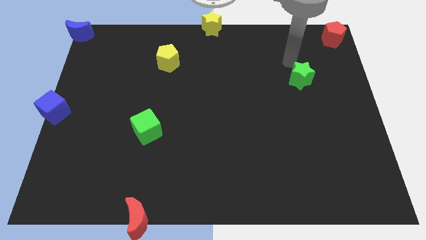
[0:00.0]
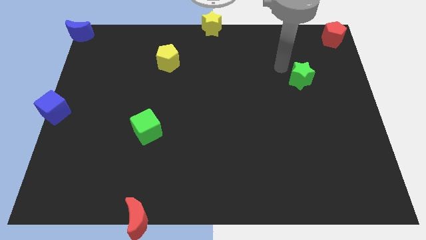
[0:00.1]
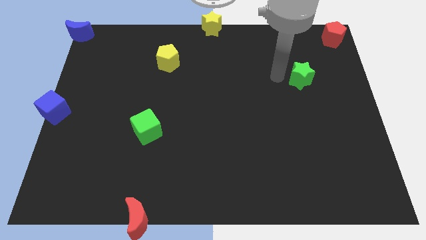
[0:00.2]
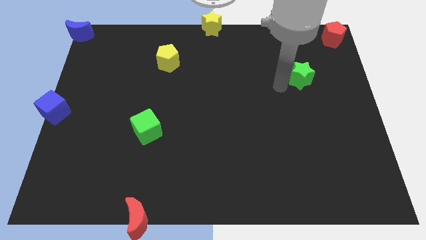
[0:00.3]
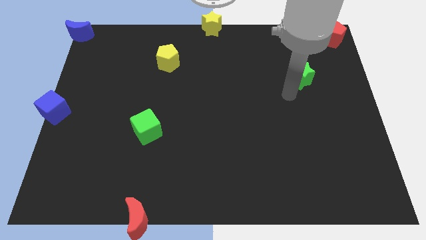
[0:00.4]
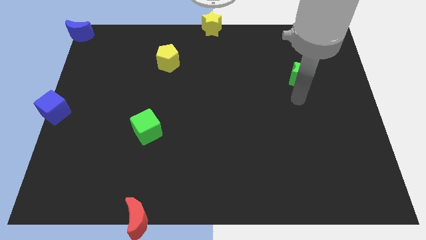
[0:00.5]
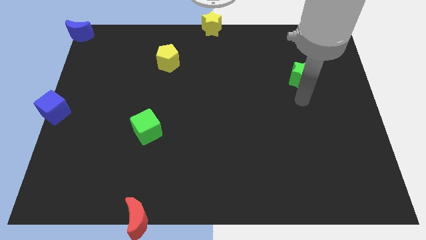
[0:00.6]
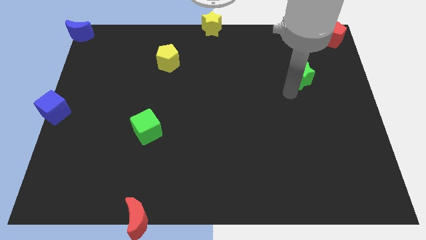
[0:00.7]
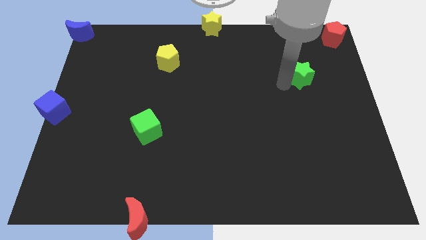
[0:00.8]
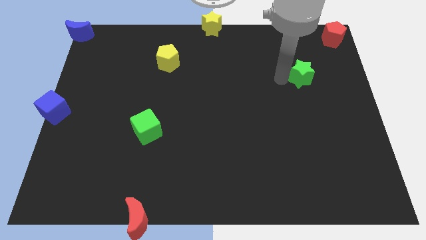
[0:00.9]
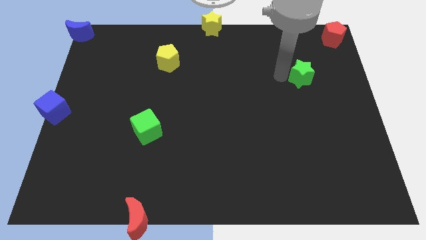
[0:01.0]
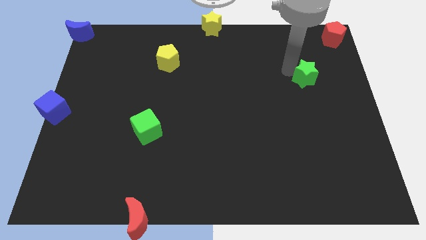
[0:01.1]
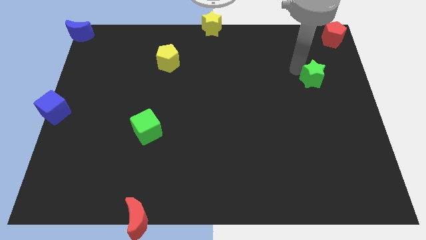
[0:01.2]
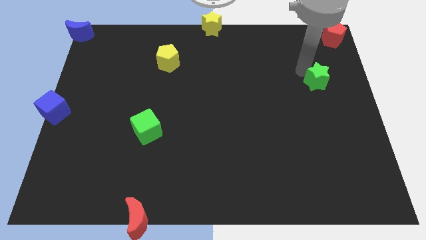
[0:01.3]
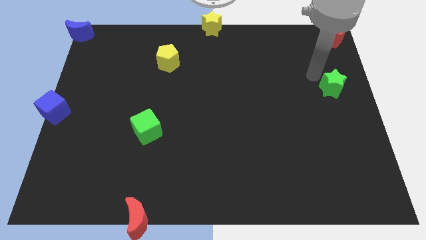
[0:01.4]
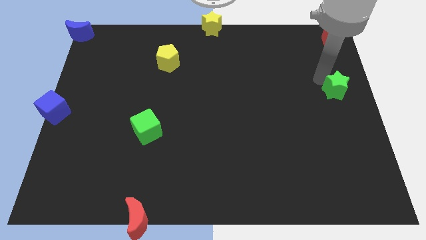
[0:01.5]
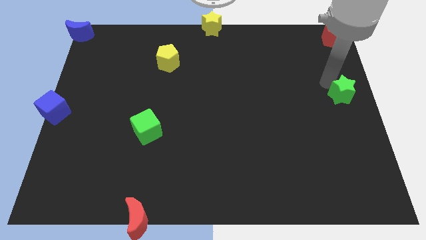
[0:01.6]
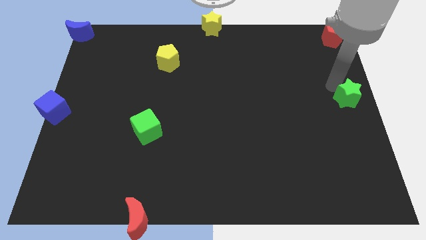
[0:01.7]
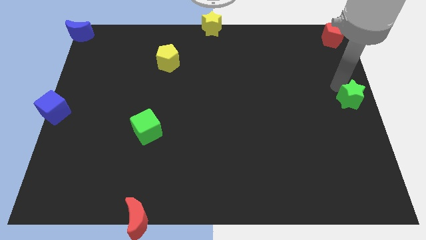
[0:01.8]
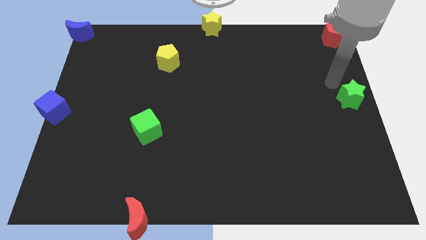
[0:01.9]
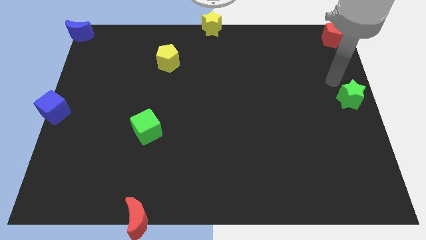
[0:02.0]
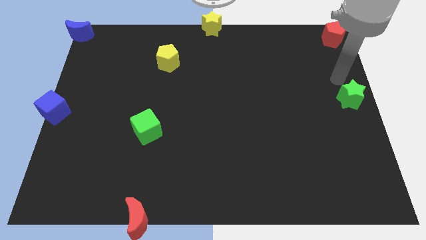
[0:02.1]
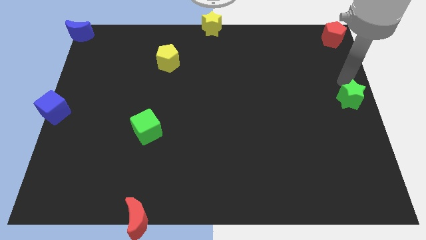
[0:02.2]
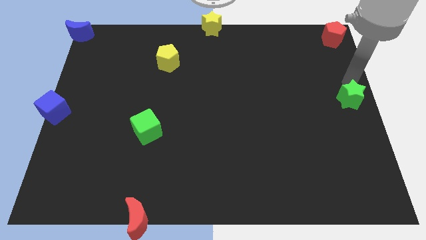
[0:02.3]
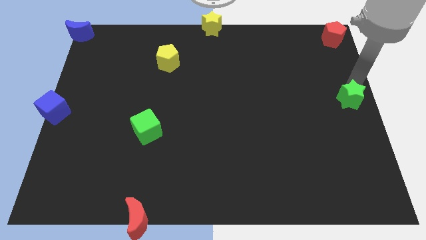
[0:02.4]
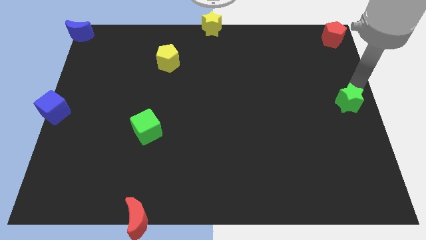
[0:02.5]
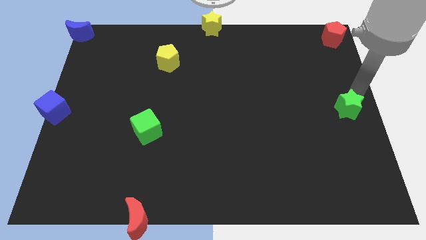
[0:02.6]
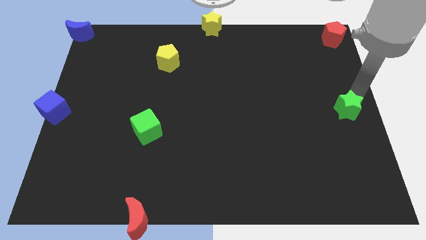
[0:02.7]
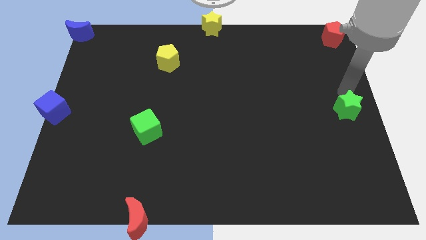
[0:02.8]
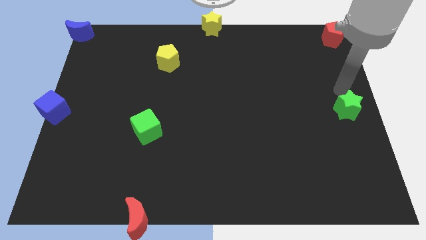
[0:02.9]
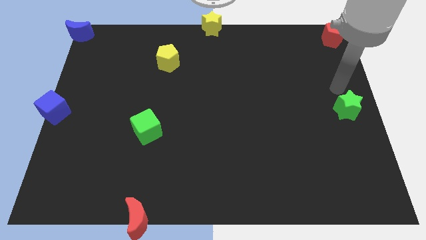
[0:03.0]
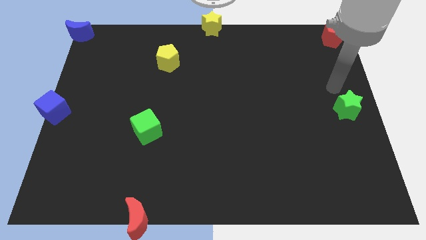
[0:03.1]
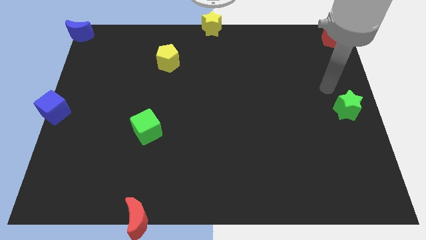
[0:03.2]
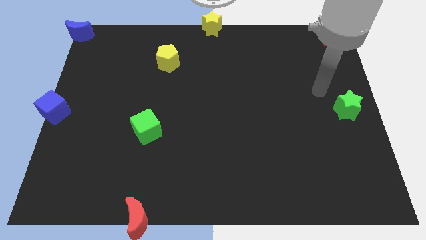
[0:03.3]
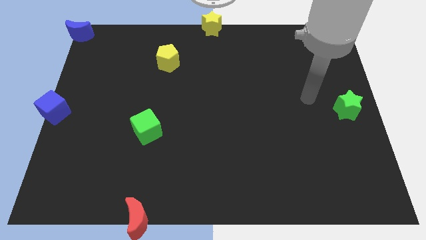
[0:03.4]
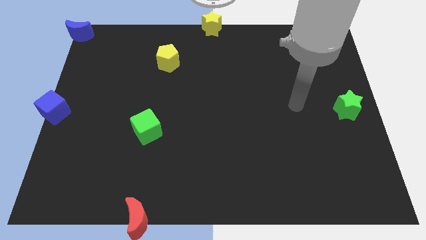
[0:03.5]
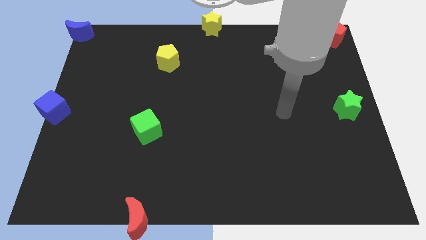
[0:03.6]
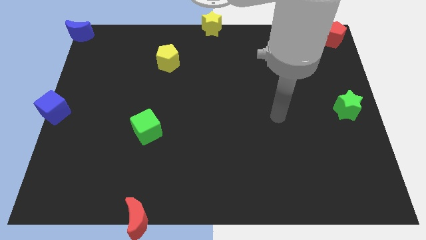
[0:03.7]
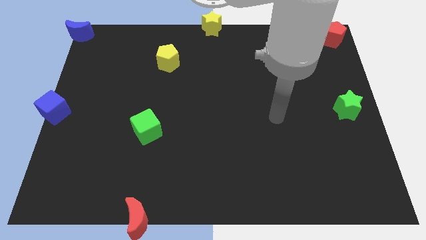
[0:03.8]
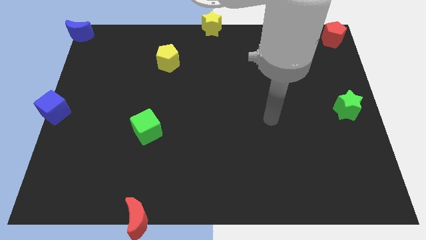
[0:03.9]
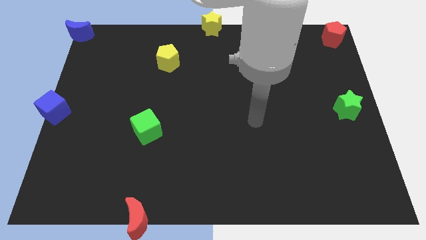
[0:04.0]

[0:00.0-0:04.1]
place the green star at the center right side of the board

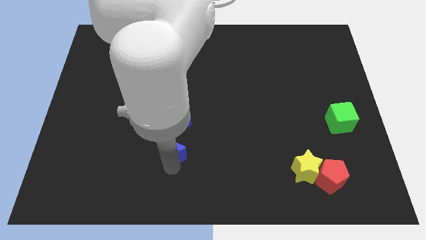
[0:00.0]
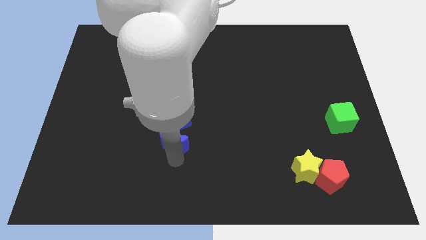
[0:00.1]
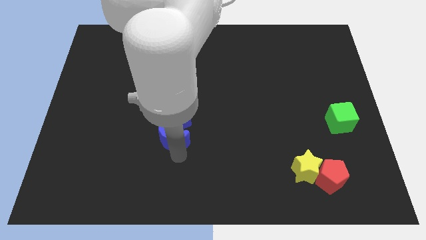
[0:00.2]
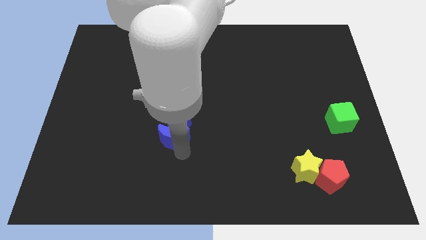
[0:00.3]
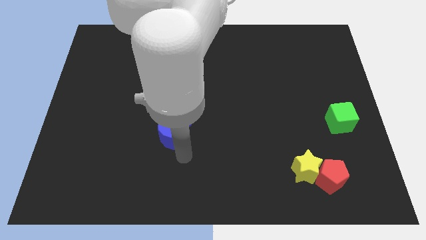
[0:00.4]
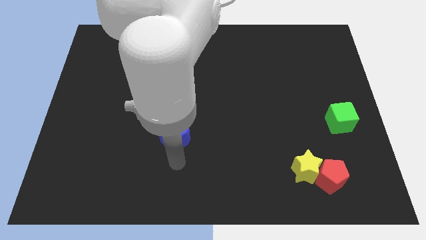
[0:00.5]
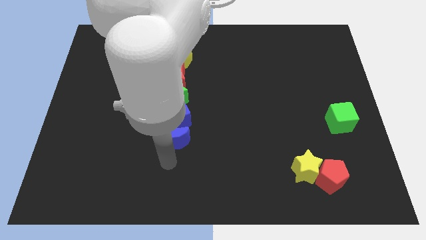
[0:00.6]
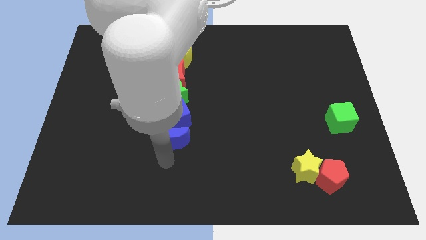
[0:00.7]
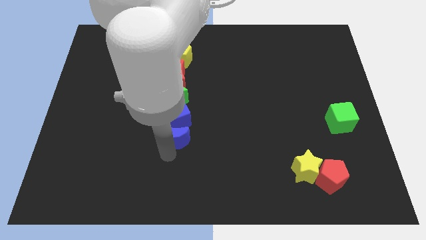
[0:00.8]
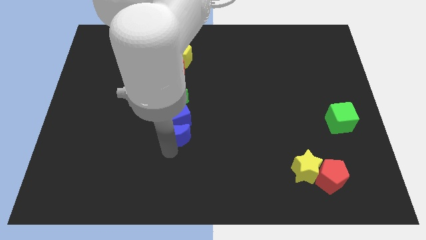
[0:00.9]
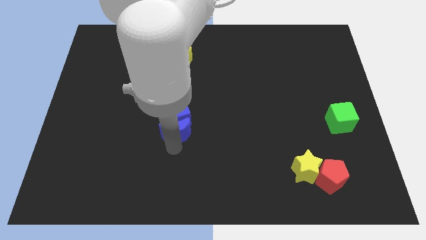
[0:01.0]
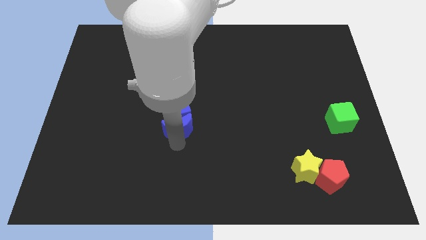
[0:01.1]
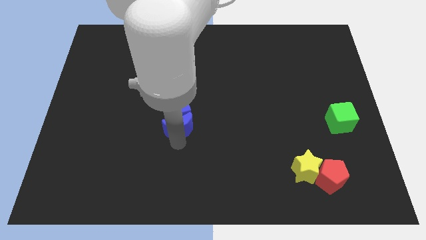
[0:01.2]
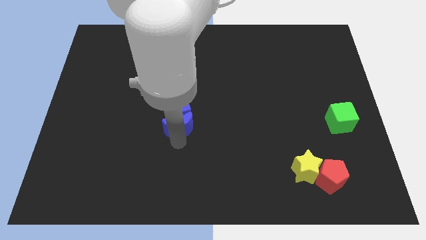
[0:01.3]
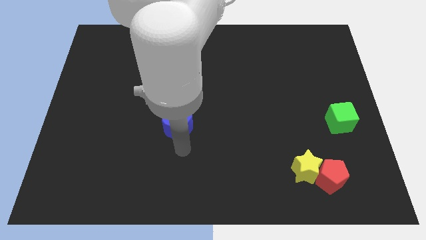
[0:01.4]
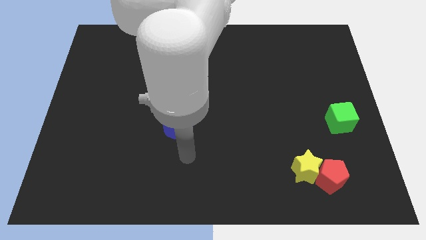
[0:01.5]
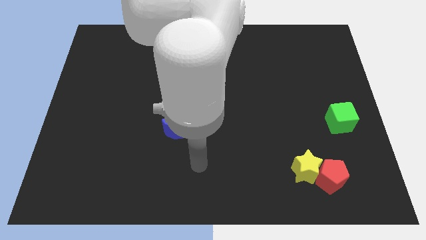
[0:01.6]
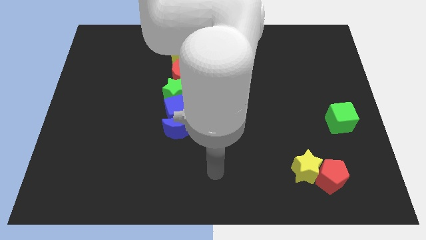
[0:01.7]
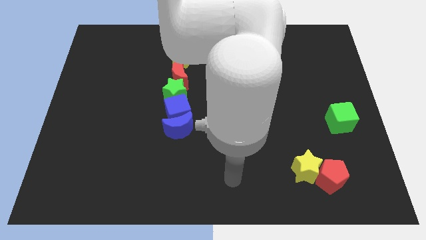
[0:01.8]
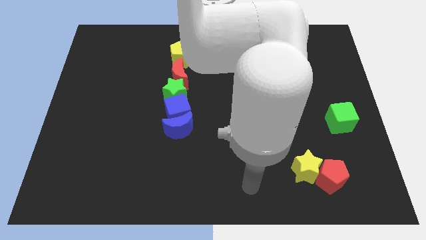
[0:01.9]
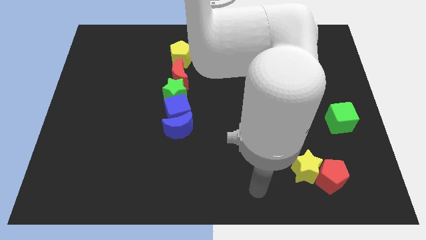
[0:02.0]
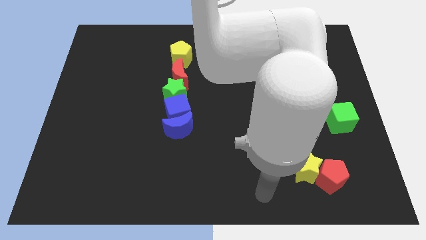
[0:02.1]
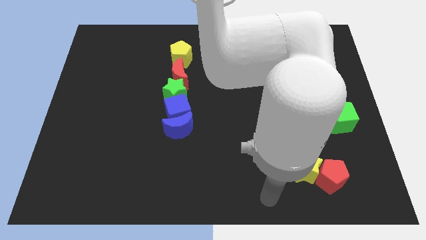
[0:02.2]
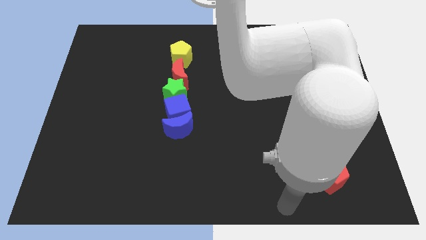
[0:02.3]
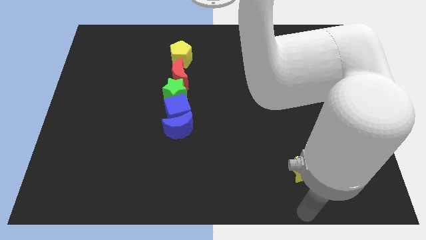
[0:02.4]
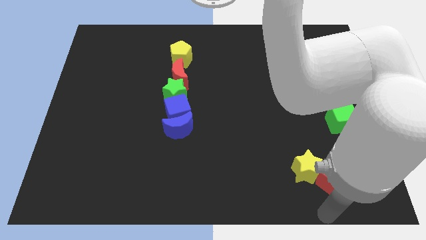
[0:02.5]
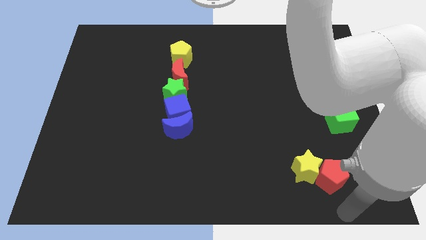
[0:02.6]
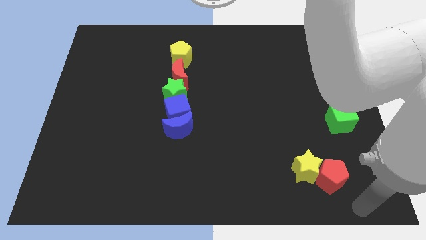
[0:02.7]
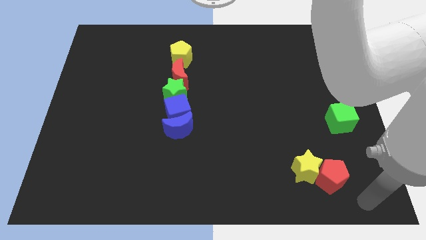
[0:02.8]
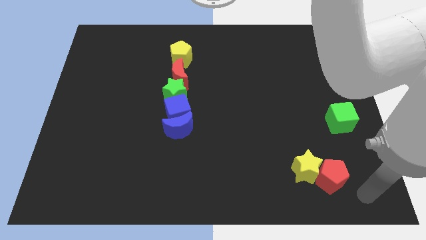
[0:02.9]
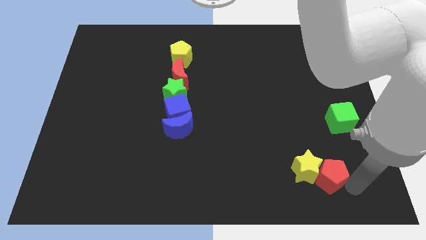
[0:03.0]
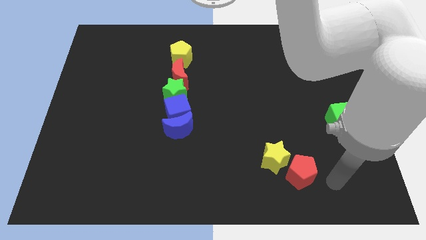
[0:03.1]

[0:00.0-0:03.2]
slide the blue moon into the blue cube

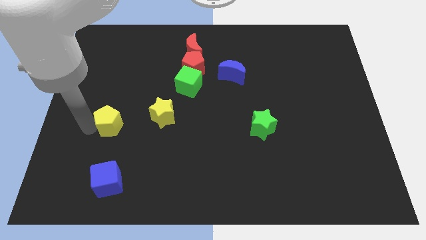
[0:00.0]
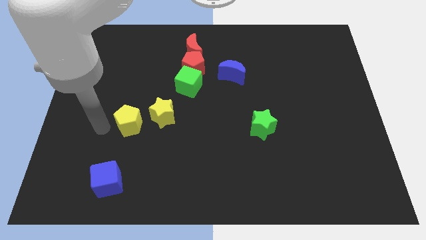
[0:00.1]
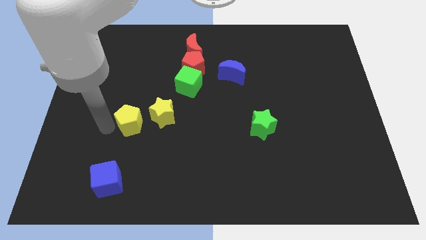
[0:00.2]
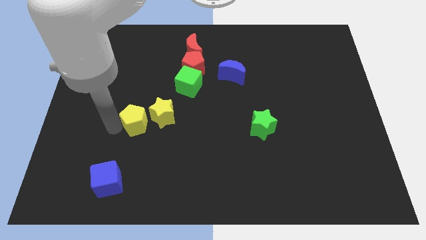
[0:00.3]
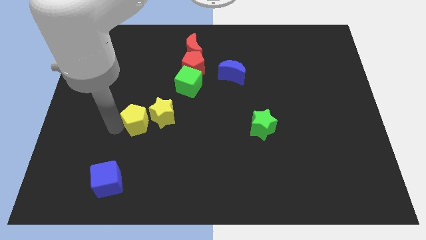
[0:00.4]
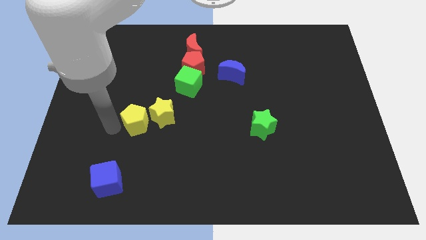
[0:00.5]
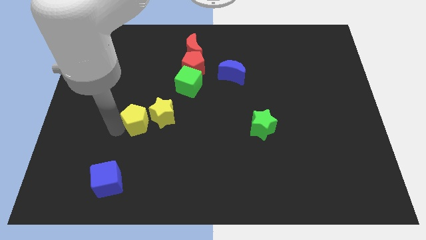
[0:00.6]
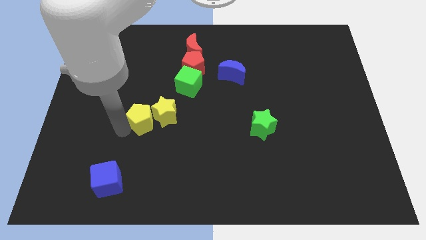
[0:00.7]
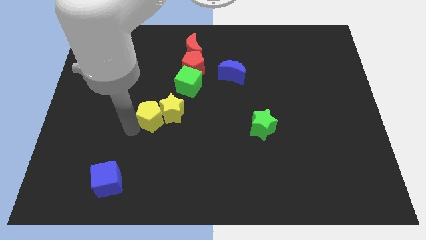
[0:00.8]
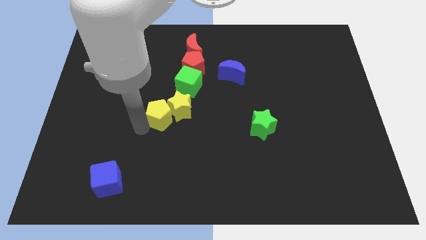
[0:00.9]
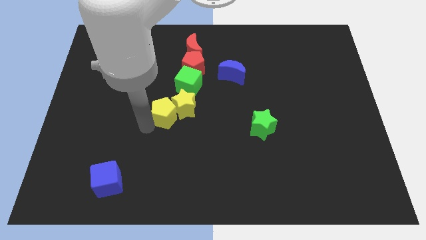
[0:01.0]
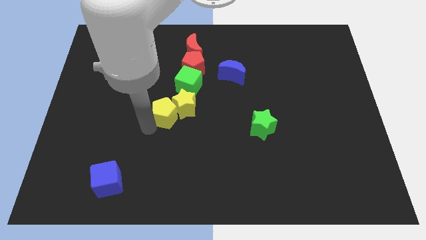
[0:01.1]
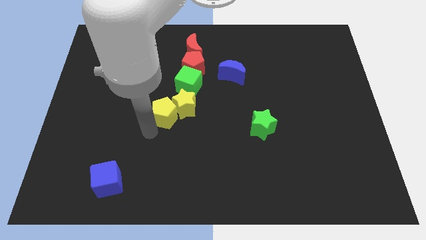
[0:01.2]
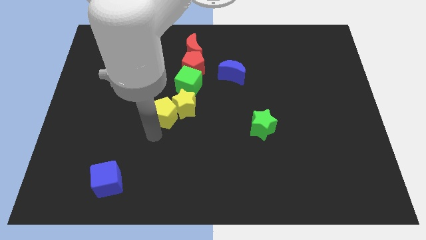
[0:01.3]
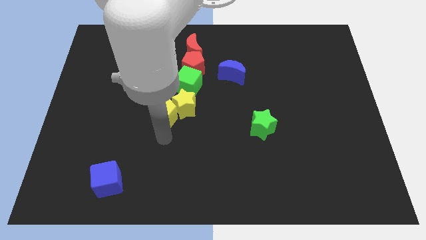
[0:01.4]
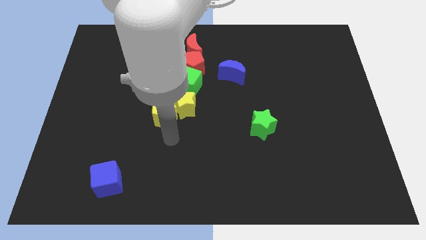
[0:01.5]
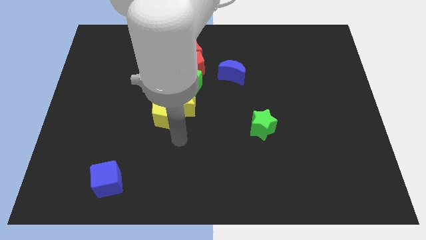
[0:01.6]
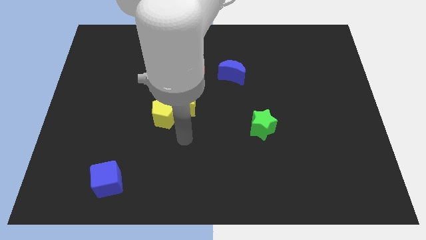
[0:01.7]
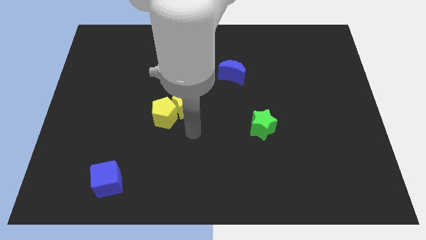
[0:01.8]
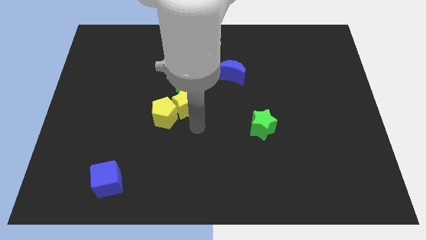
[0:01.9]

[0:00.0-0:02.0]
push the yellow blocks below green cube

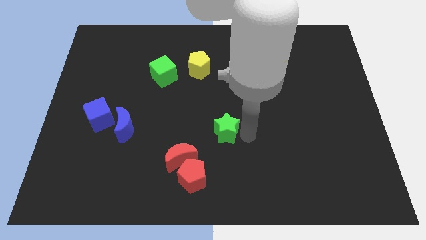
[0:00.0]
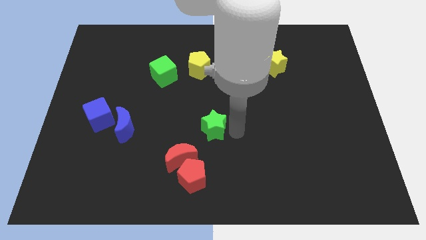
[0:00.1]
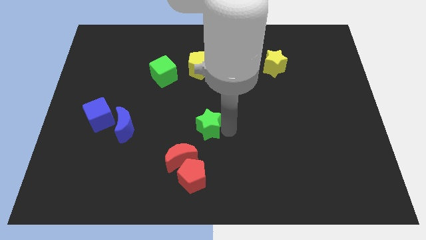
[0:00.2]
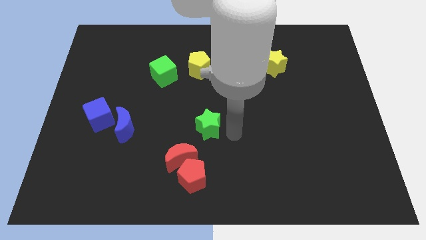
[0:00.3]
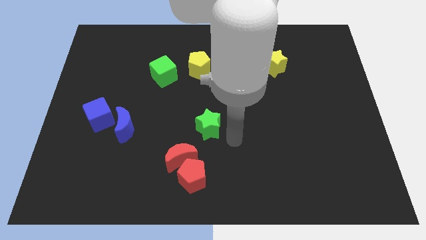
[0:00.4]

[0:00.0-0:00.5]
push the green star towards the center of the board
